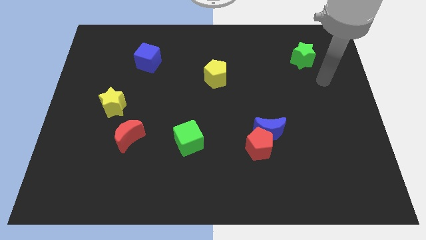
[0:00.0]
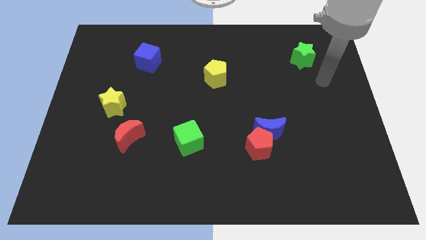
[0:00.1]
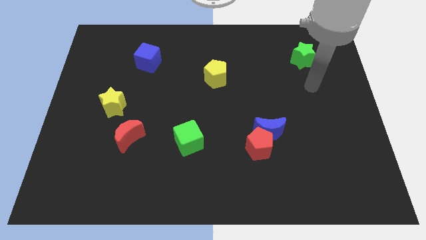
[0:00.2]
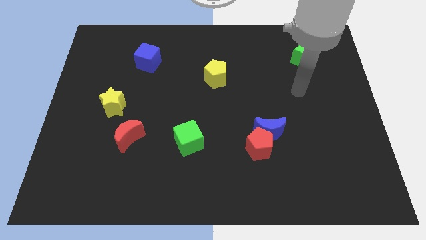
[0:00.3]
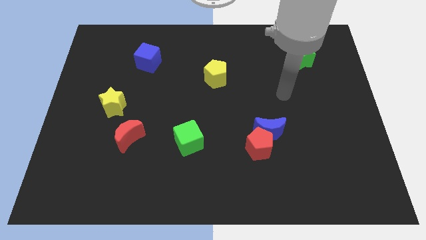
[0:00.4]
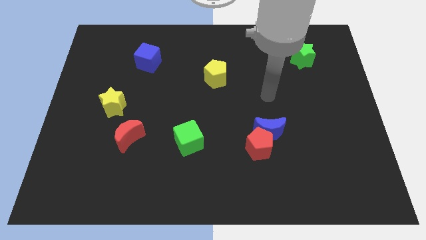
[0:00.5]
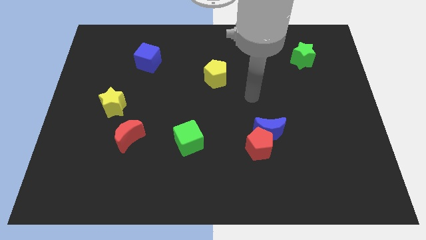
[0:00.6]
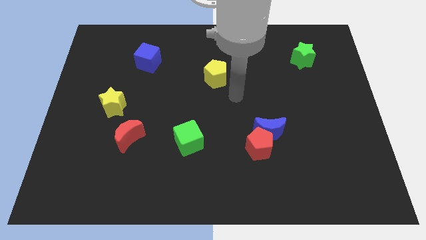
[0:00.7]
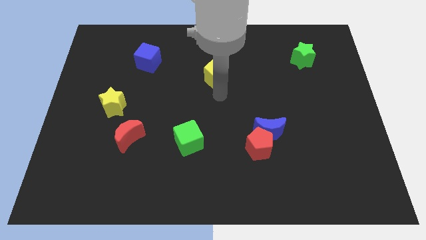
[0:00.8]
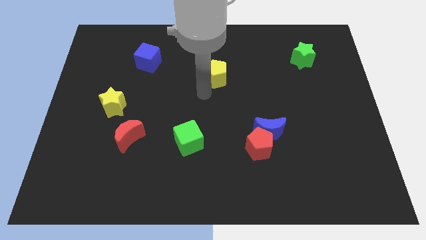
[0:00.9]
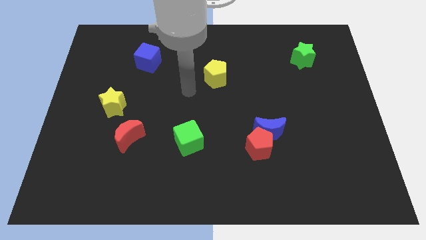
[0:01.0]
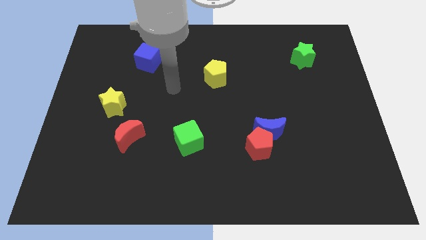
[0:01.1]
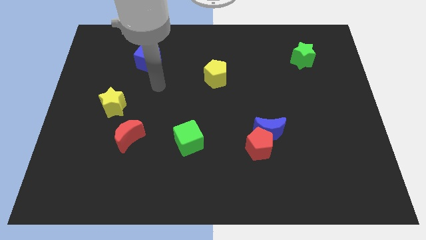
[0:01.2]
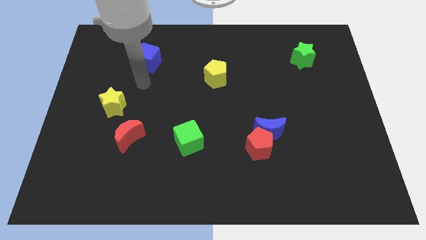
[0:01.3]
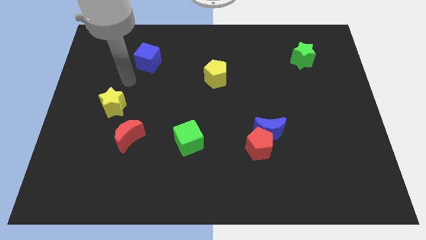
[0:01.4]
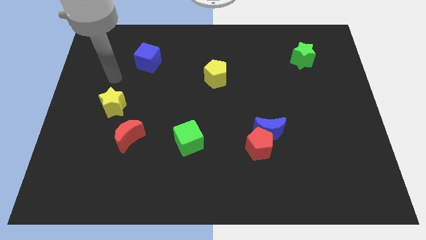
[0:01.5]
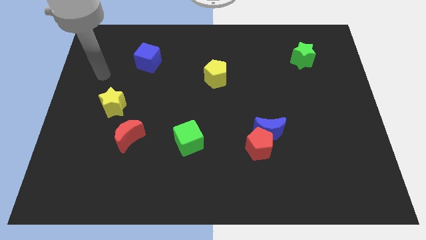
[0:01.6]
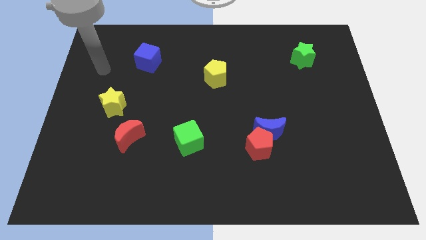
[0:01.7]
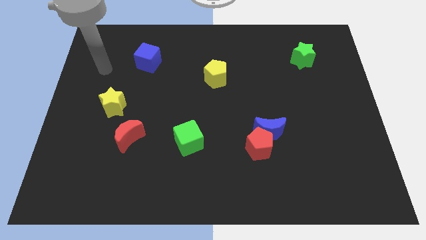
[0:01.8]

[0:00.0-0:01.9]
move the arm from right to left

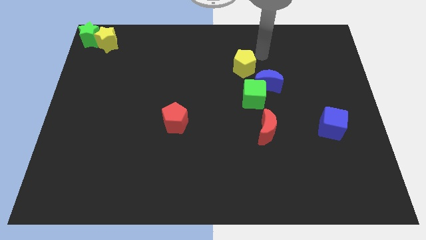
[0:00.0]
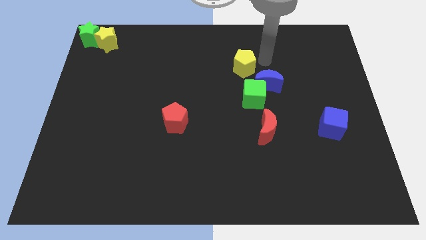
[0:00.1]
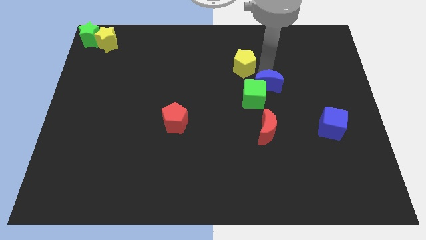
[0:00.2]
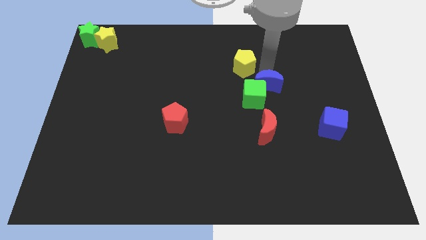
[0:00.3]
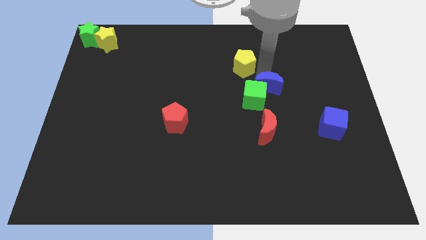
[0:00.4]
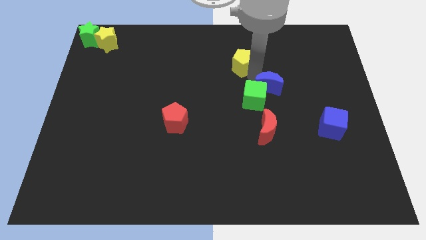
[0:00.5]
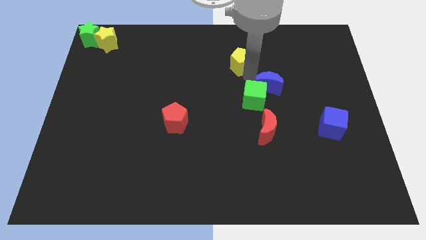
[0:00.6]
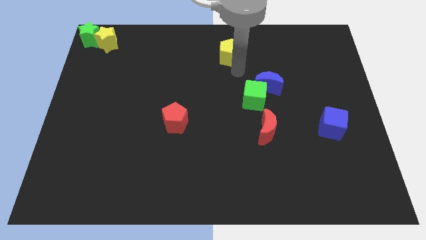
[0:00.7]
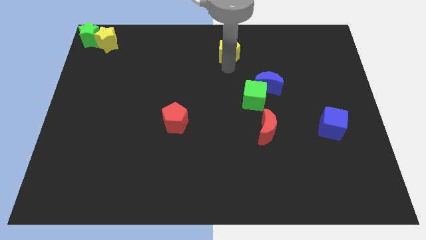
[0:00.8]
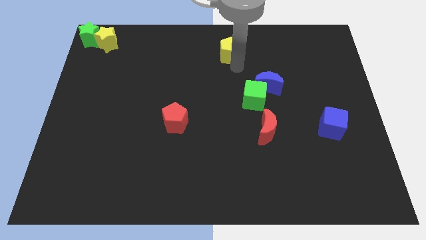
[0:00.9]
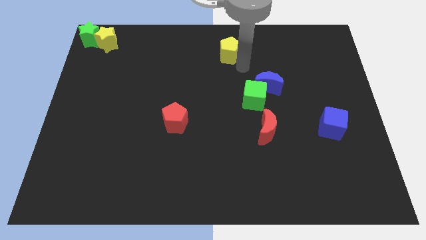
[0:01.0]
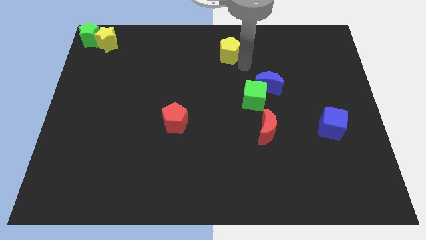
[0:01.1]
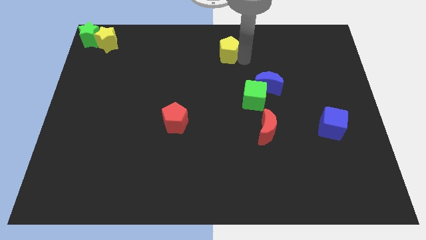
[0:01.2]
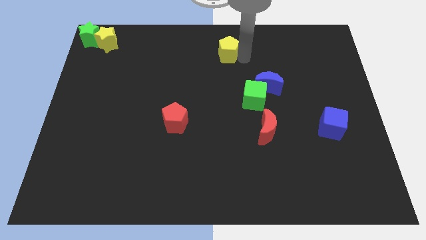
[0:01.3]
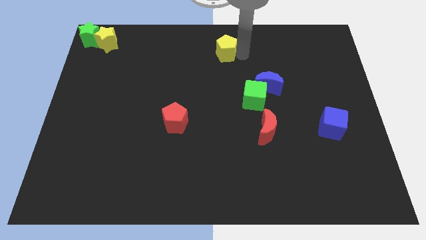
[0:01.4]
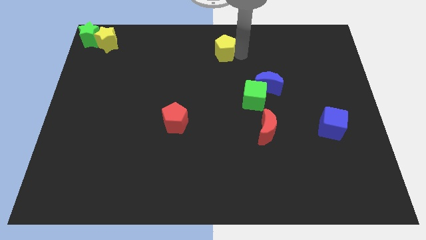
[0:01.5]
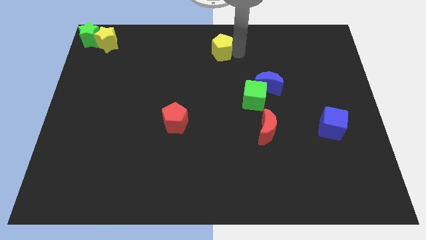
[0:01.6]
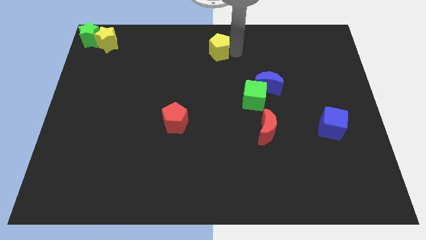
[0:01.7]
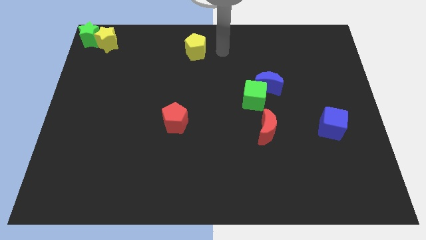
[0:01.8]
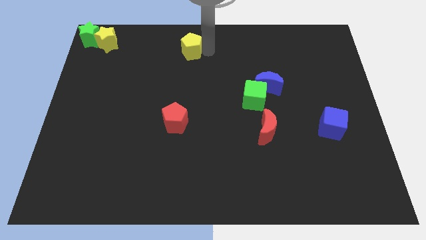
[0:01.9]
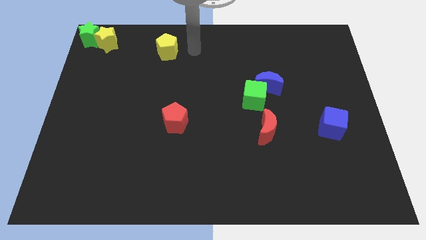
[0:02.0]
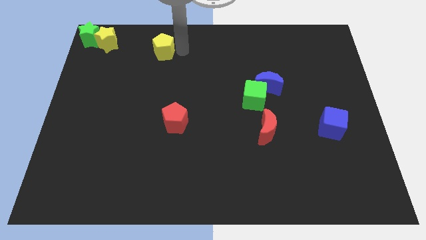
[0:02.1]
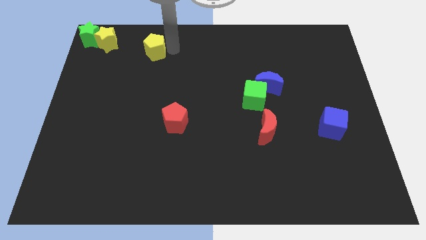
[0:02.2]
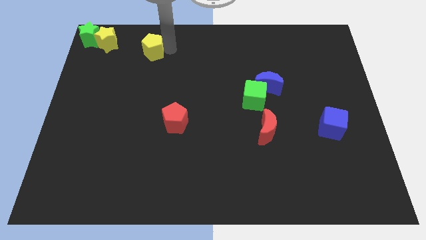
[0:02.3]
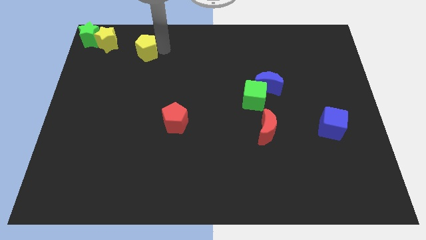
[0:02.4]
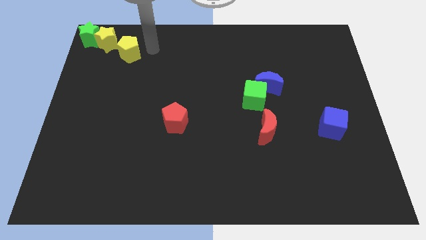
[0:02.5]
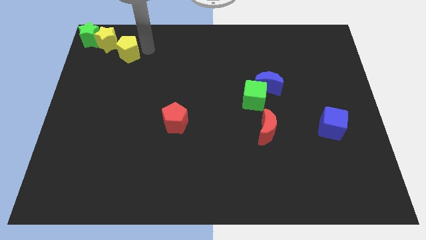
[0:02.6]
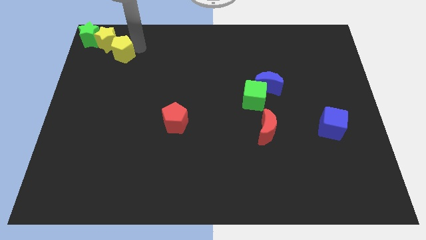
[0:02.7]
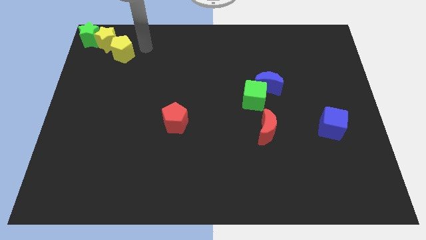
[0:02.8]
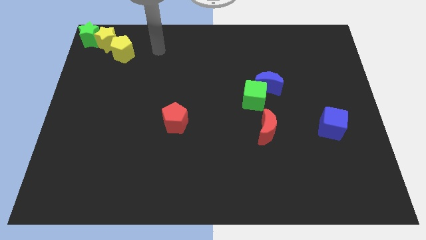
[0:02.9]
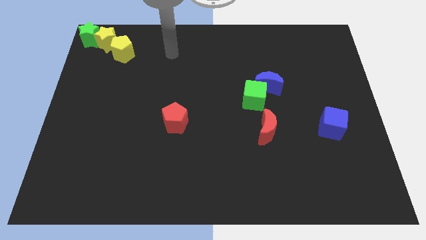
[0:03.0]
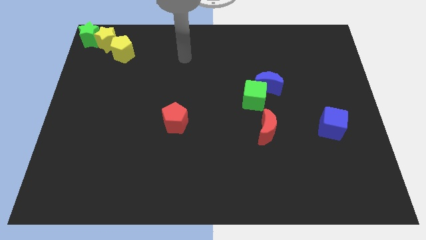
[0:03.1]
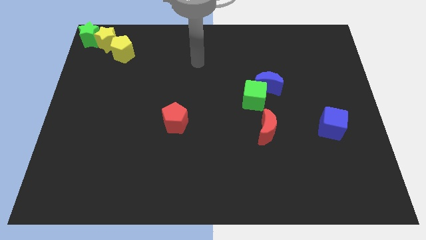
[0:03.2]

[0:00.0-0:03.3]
put yellow pentagon bottom right to yellow star

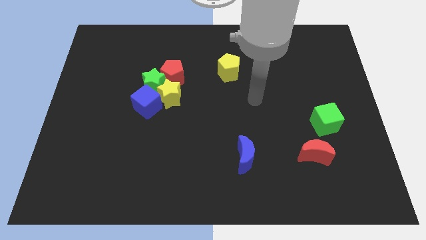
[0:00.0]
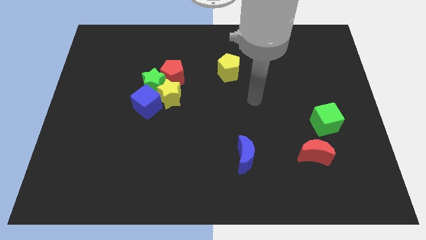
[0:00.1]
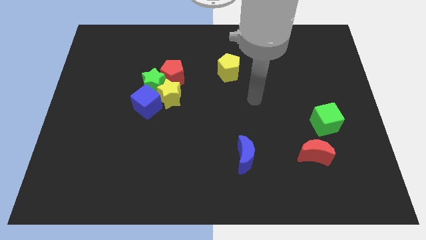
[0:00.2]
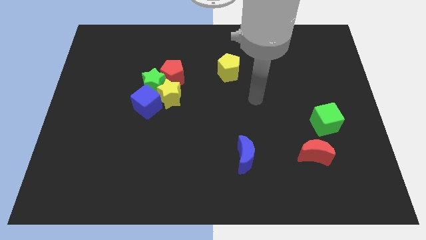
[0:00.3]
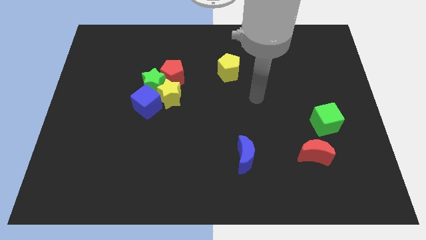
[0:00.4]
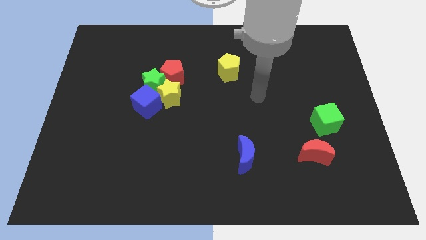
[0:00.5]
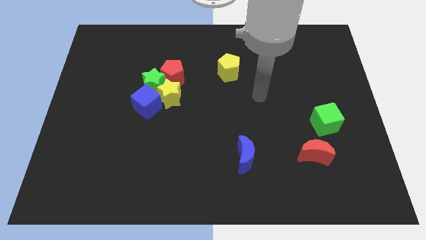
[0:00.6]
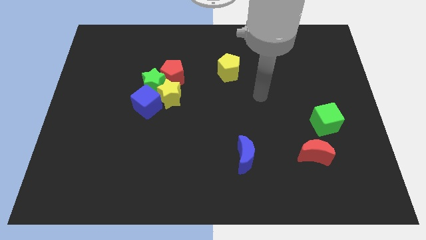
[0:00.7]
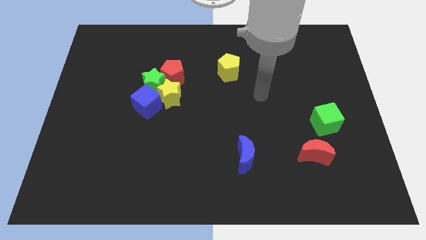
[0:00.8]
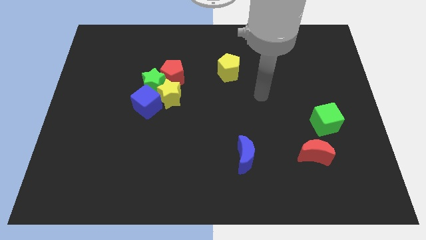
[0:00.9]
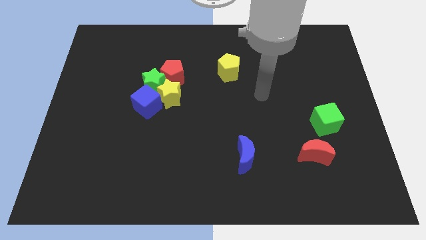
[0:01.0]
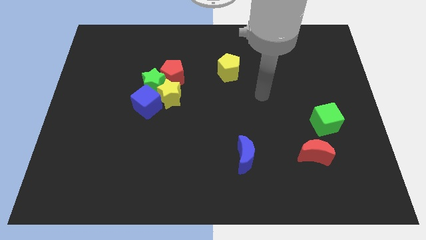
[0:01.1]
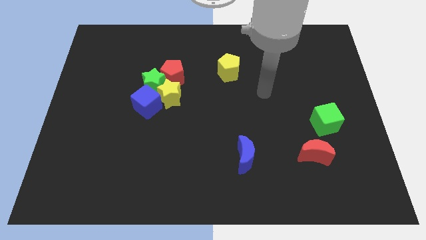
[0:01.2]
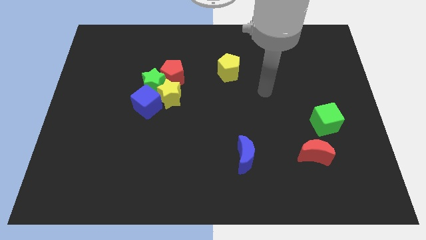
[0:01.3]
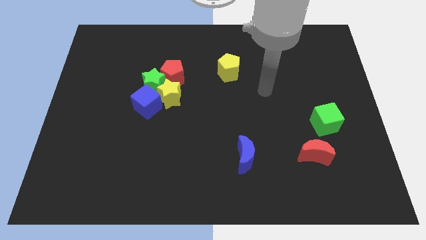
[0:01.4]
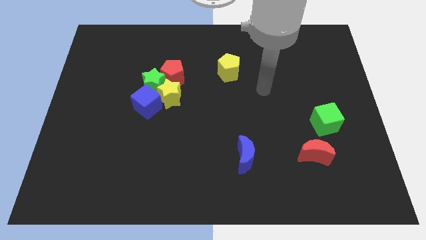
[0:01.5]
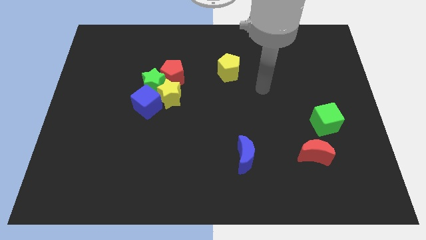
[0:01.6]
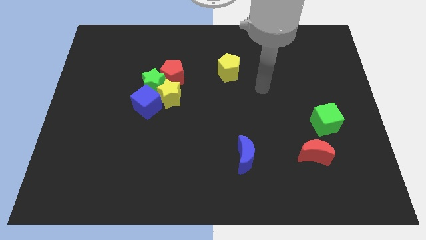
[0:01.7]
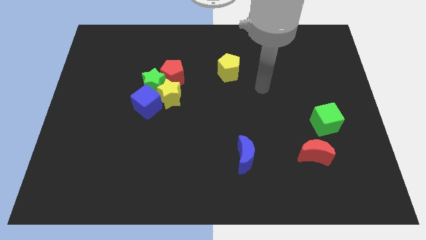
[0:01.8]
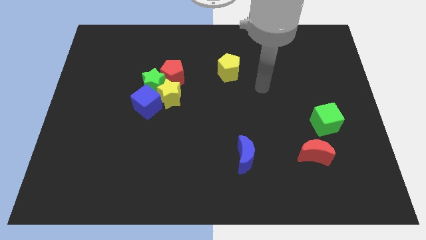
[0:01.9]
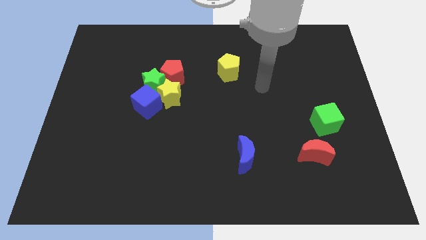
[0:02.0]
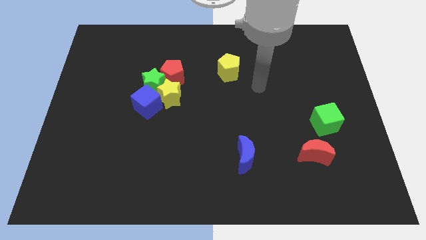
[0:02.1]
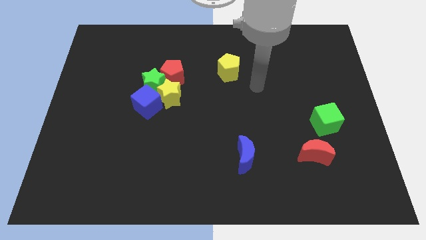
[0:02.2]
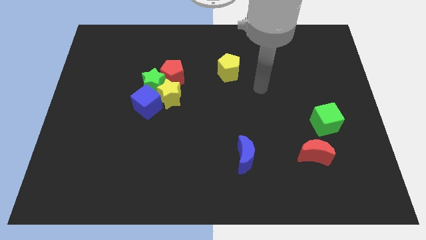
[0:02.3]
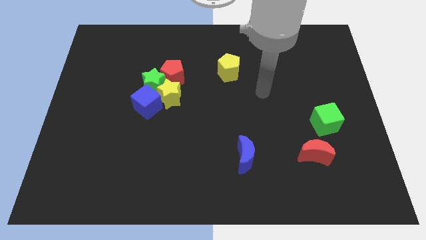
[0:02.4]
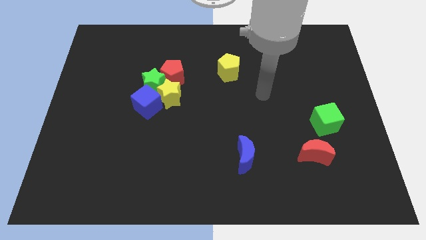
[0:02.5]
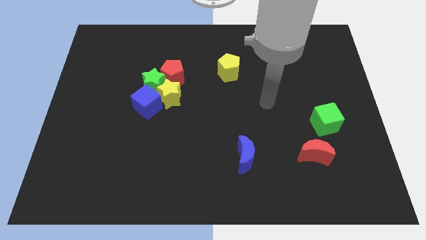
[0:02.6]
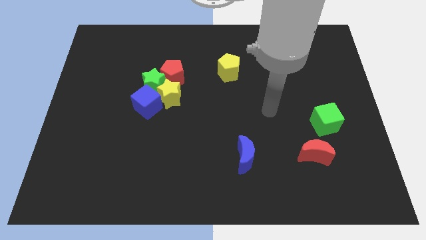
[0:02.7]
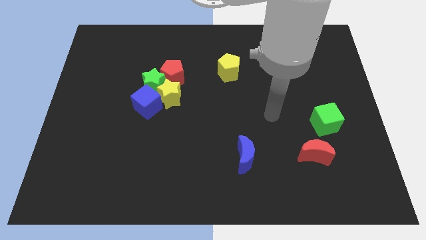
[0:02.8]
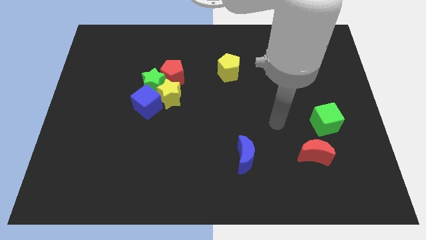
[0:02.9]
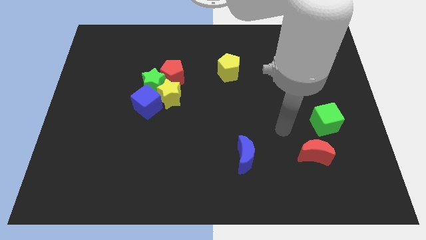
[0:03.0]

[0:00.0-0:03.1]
move your arm to the left of the green cube

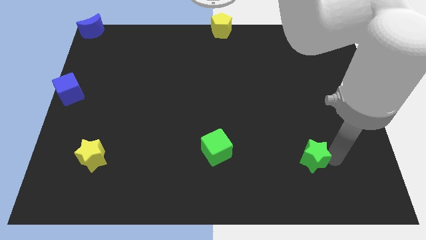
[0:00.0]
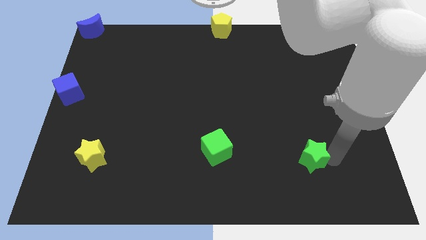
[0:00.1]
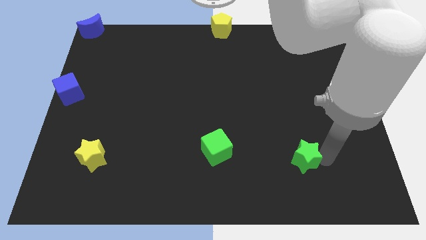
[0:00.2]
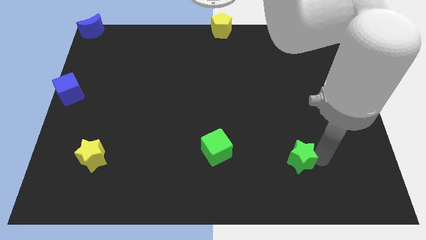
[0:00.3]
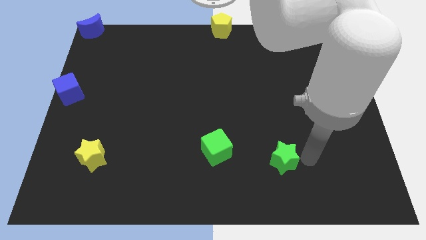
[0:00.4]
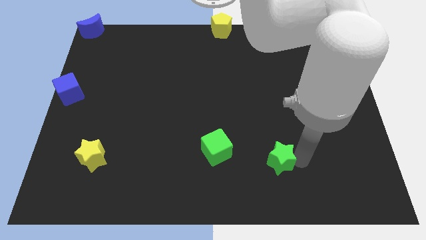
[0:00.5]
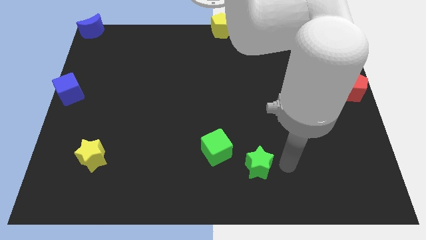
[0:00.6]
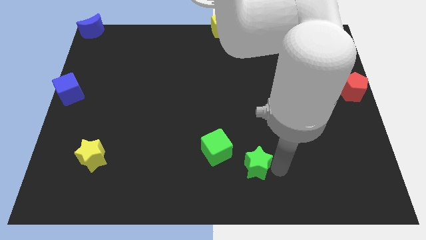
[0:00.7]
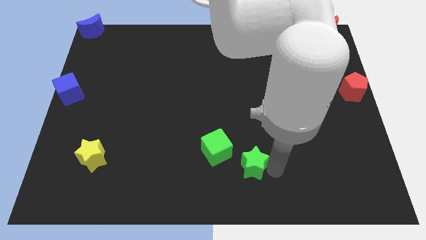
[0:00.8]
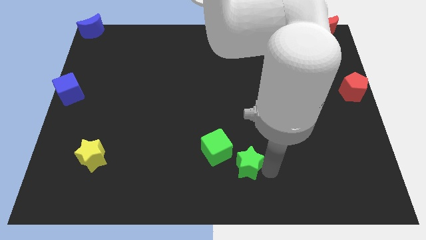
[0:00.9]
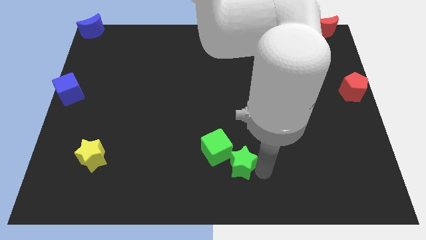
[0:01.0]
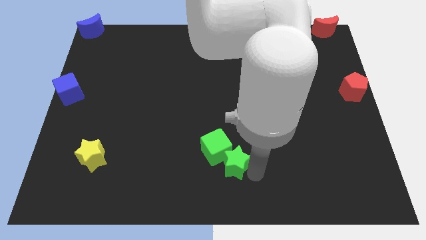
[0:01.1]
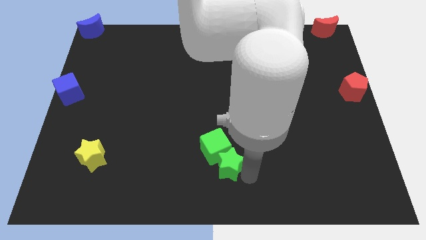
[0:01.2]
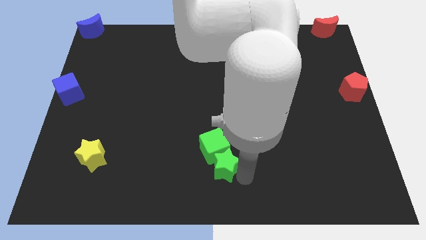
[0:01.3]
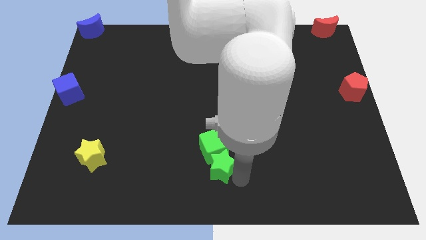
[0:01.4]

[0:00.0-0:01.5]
move the green star into the green cube
